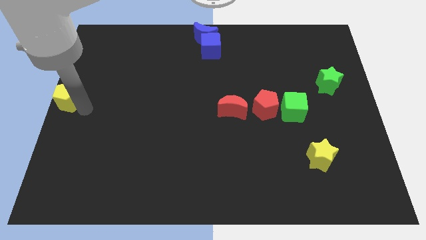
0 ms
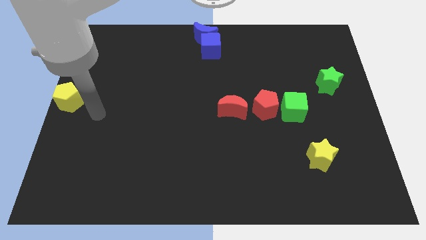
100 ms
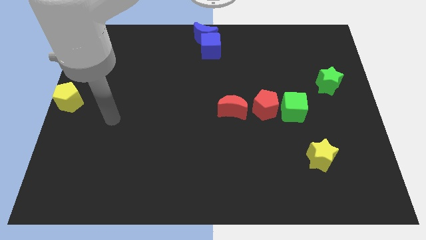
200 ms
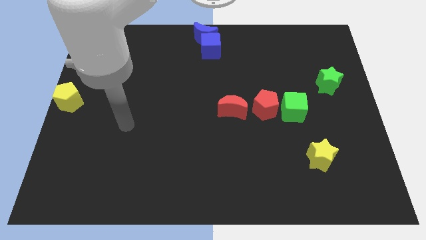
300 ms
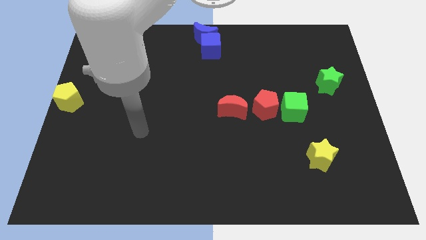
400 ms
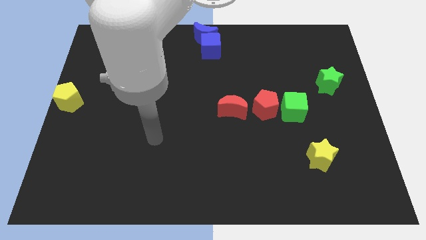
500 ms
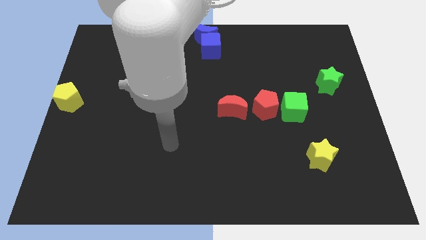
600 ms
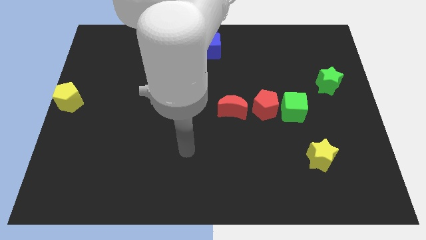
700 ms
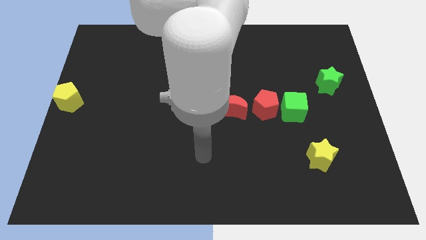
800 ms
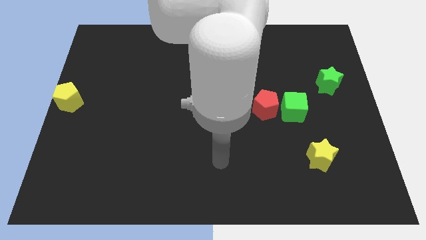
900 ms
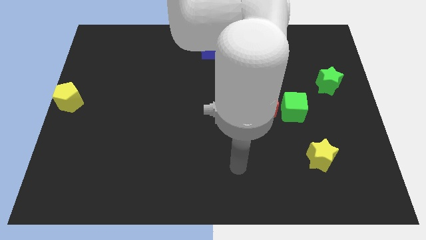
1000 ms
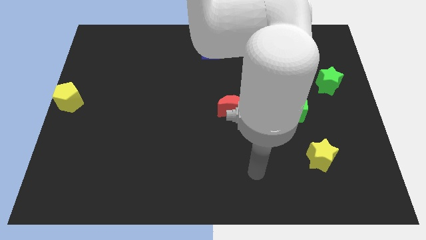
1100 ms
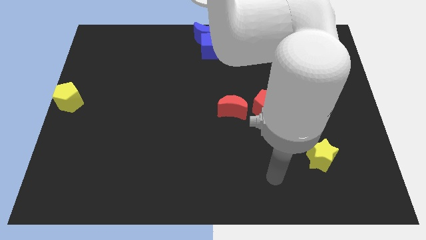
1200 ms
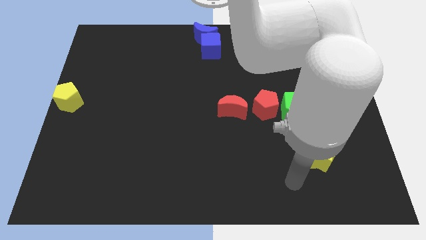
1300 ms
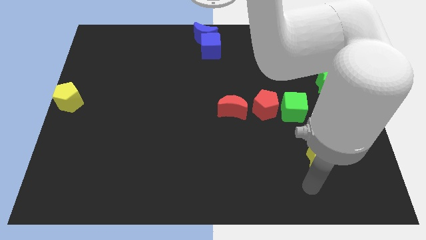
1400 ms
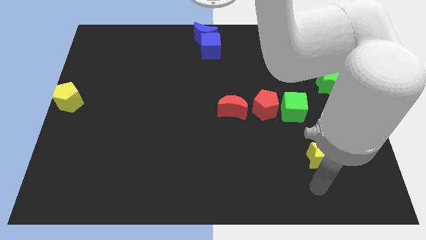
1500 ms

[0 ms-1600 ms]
place your arm below the yellow star

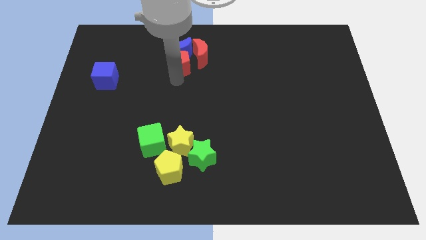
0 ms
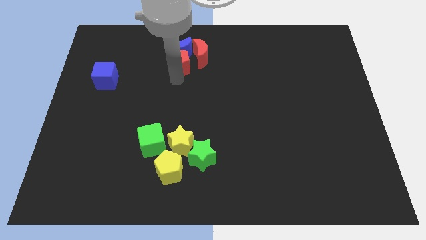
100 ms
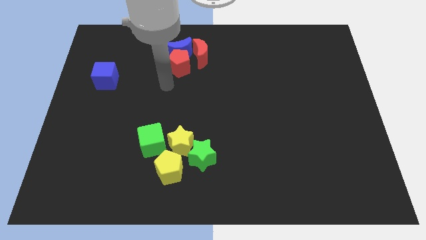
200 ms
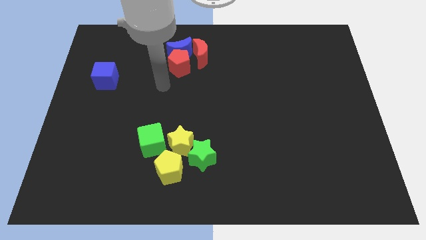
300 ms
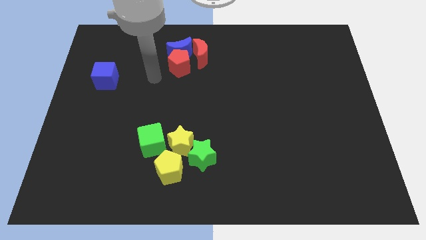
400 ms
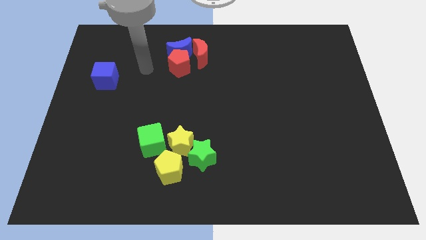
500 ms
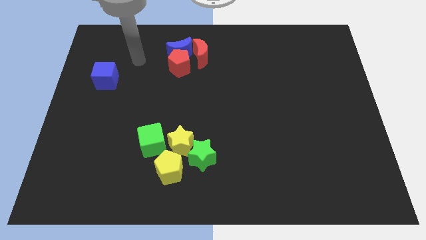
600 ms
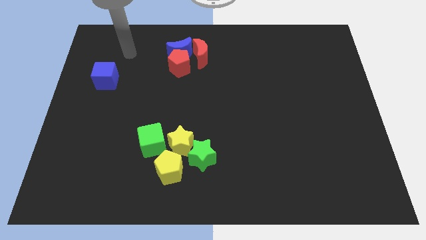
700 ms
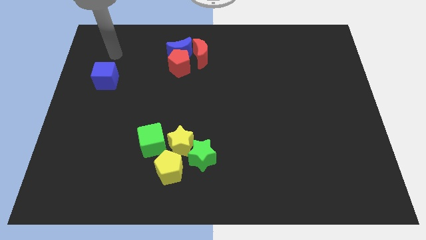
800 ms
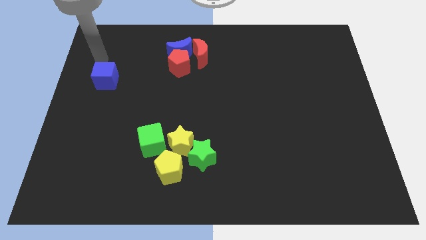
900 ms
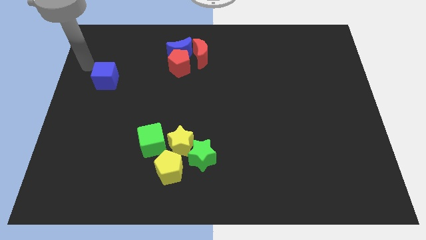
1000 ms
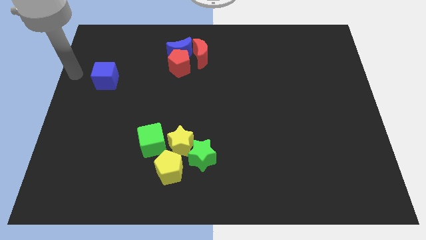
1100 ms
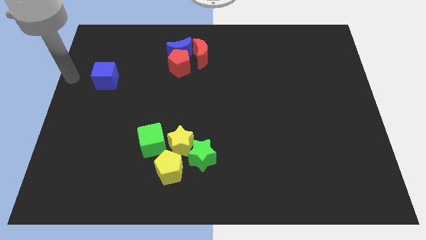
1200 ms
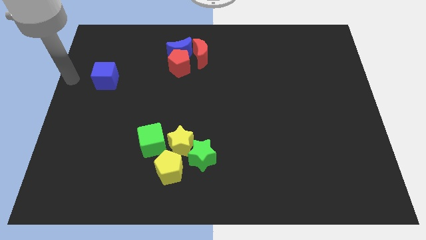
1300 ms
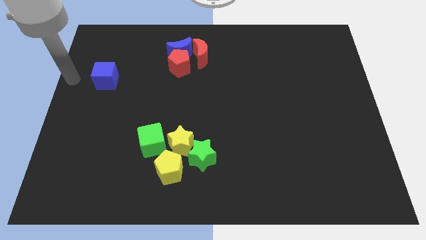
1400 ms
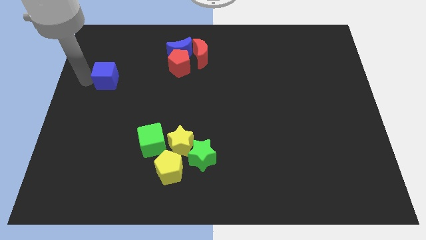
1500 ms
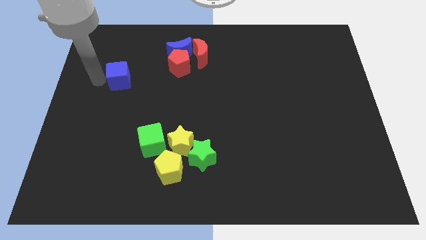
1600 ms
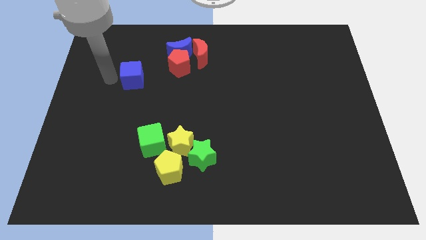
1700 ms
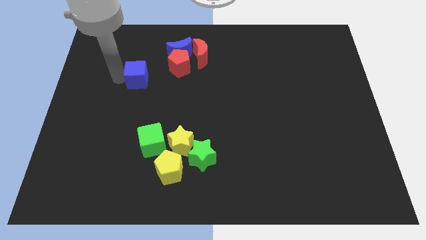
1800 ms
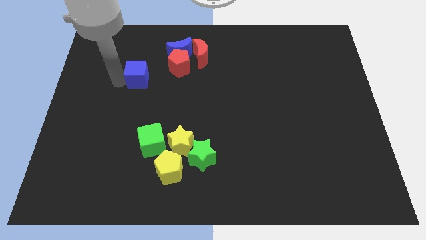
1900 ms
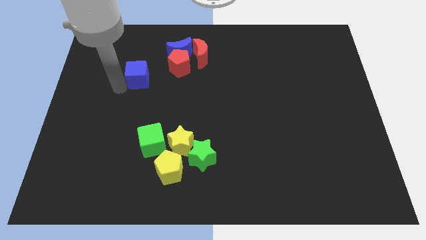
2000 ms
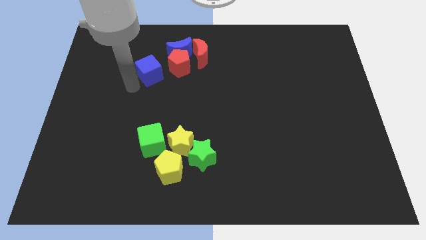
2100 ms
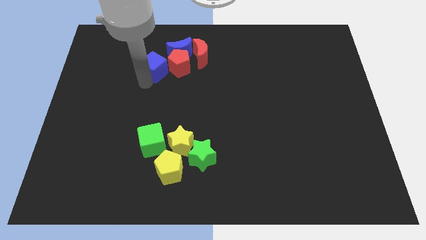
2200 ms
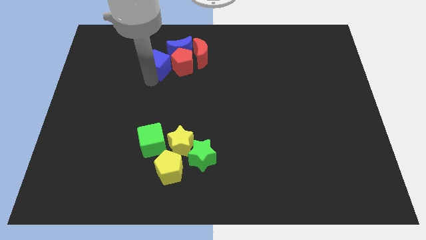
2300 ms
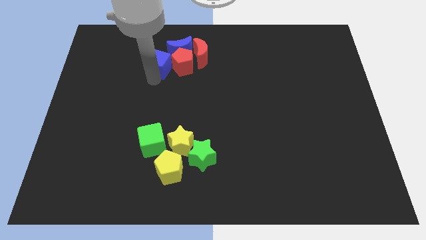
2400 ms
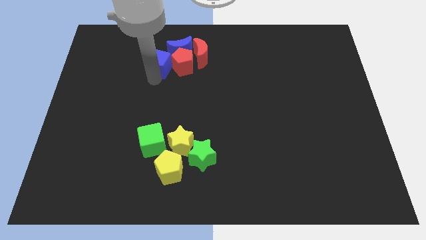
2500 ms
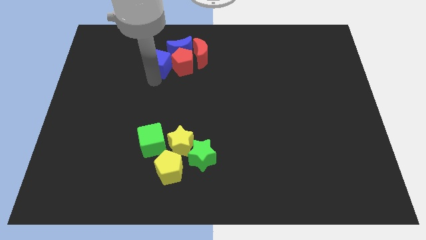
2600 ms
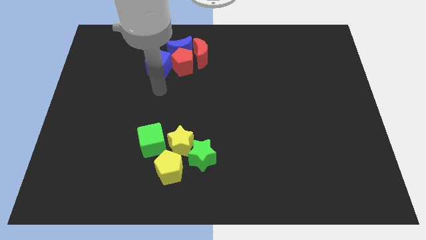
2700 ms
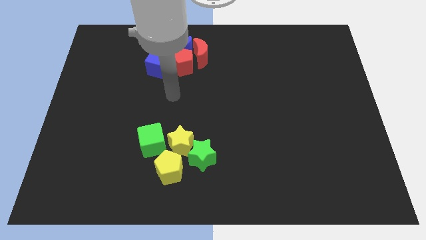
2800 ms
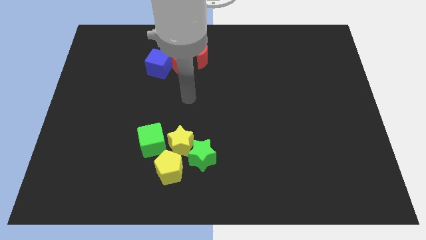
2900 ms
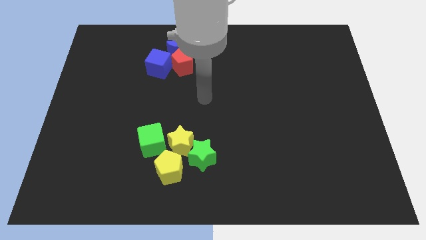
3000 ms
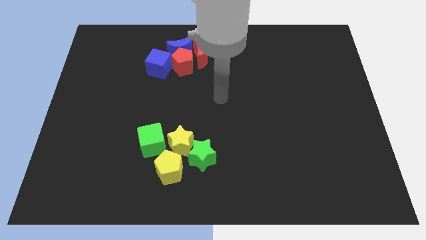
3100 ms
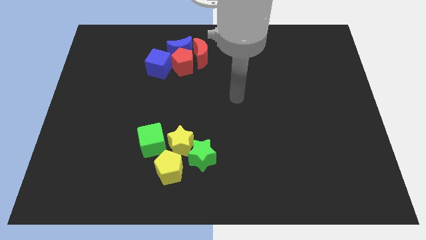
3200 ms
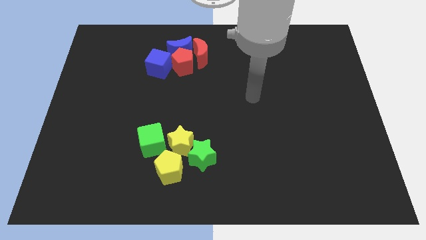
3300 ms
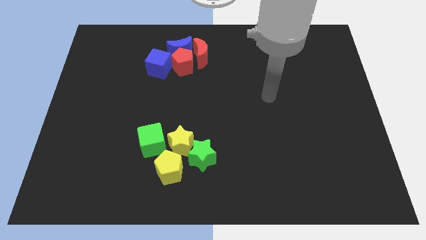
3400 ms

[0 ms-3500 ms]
push the blue cube into the red pentagon

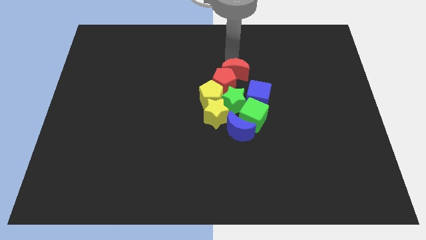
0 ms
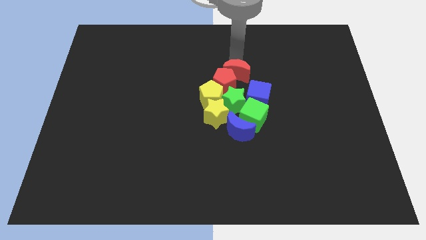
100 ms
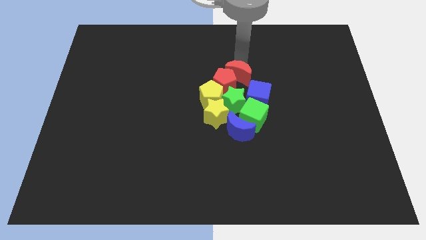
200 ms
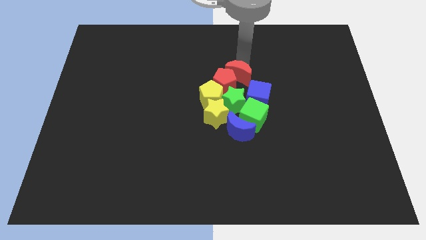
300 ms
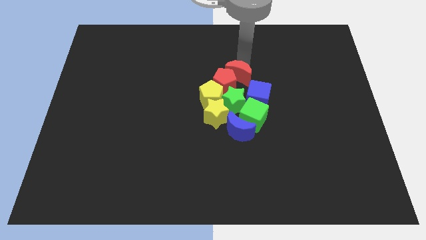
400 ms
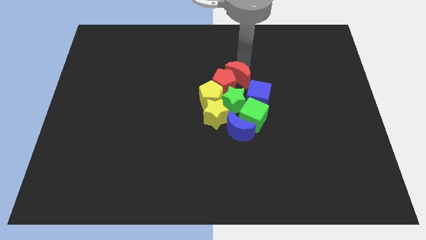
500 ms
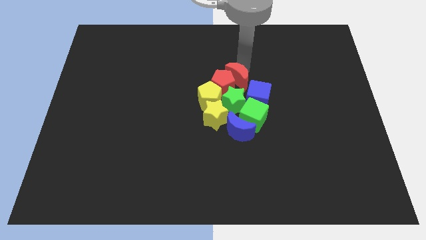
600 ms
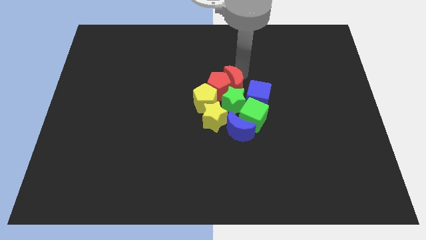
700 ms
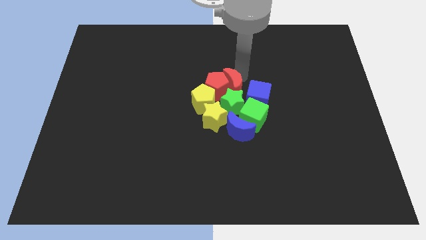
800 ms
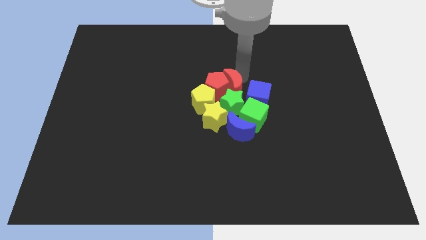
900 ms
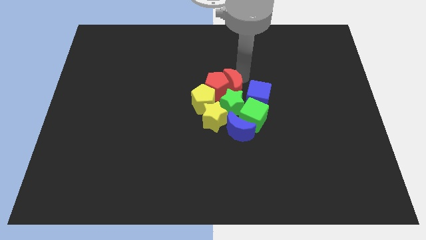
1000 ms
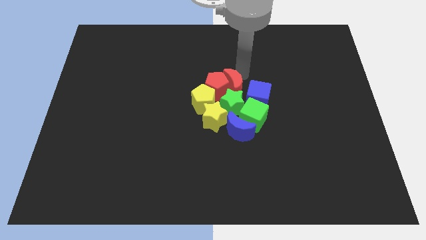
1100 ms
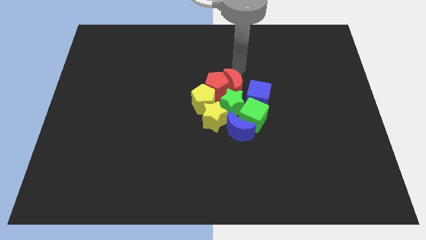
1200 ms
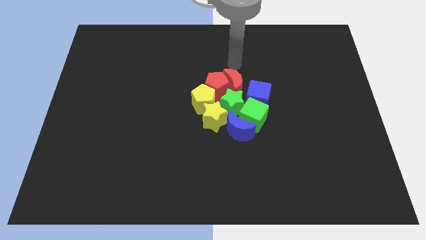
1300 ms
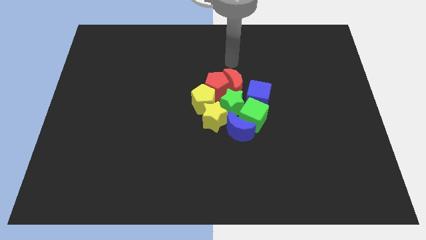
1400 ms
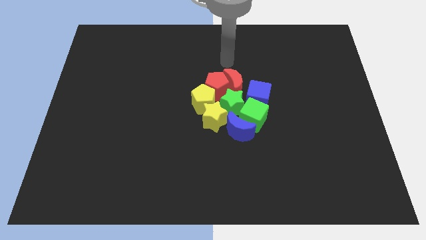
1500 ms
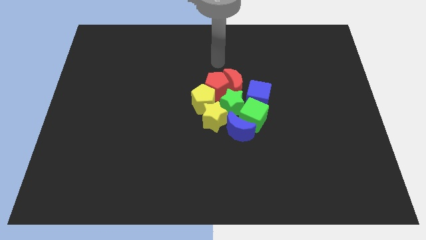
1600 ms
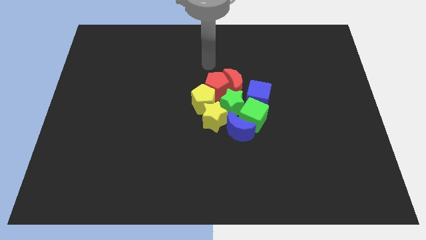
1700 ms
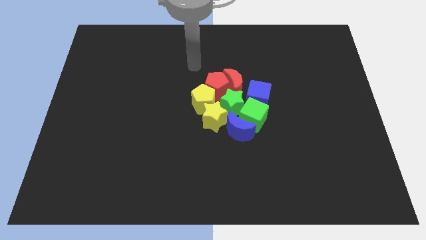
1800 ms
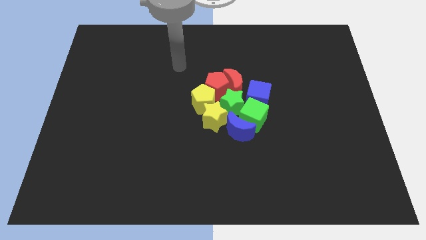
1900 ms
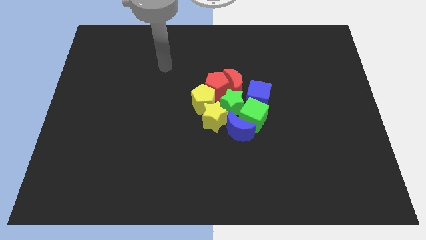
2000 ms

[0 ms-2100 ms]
push the red moon into the group of blocks

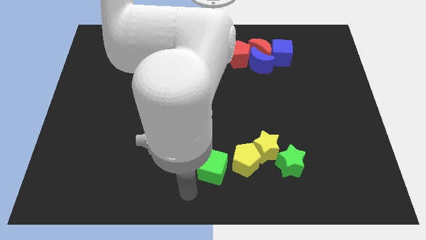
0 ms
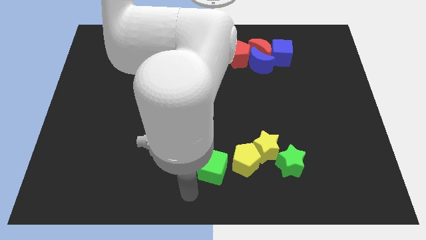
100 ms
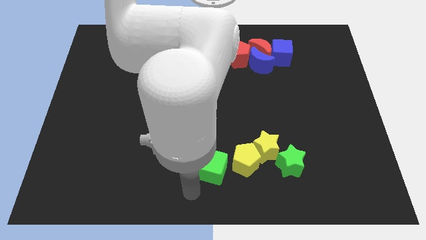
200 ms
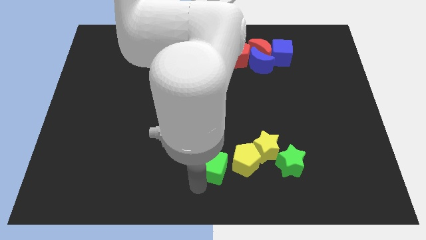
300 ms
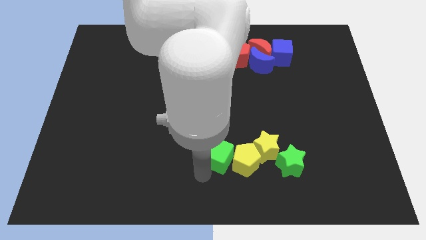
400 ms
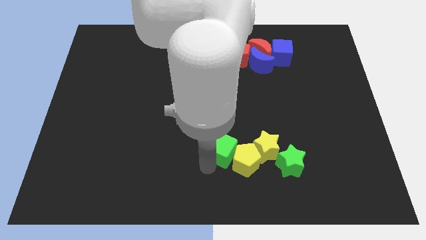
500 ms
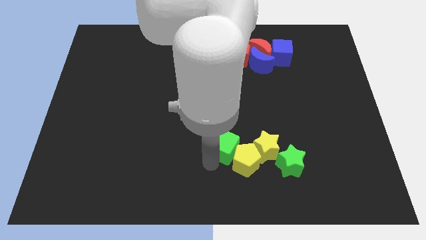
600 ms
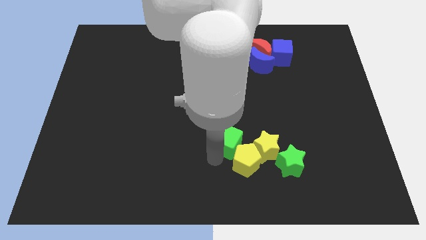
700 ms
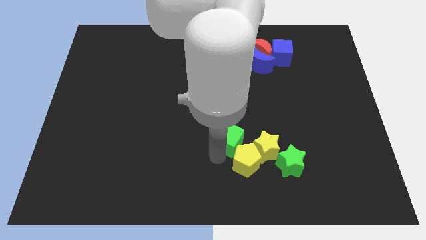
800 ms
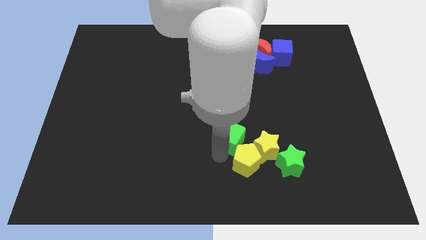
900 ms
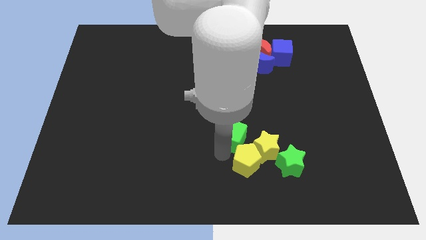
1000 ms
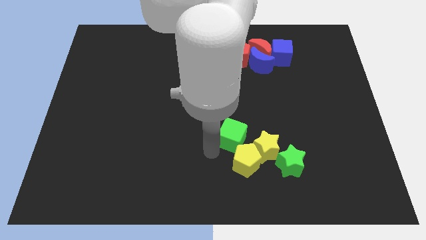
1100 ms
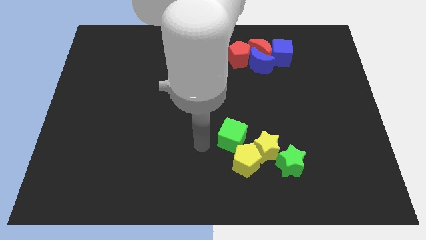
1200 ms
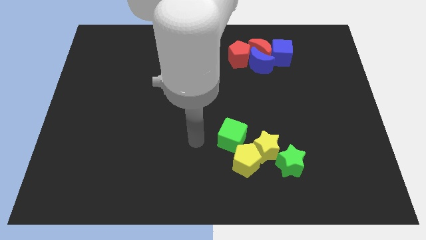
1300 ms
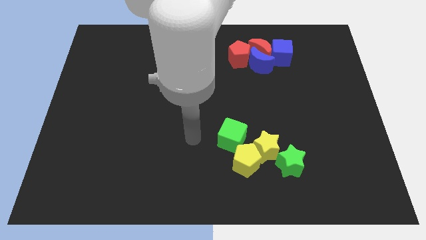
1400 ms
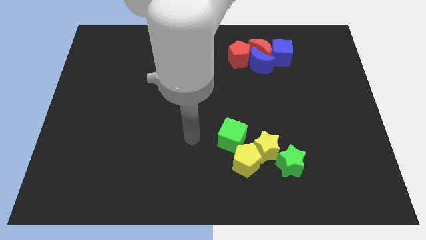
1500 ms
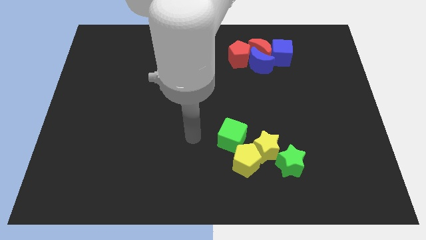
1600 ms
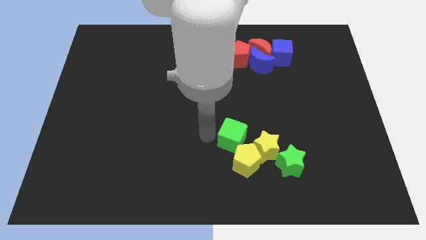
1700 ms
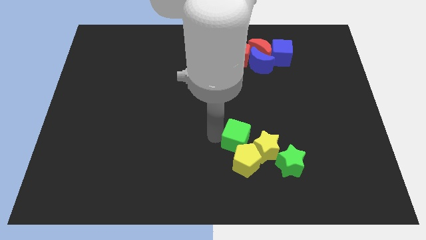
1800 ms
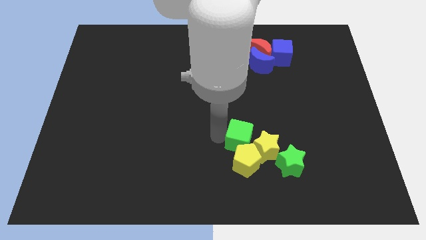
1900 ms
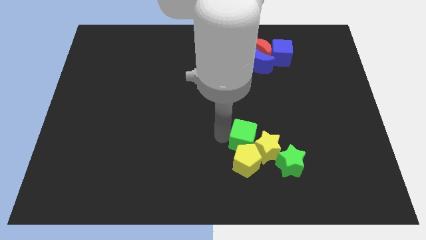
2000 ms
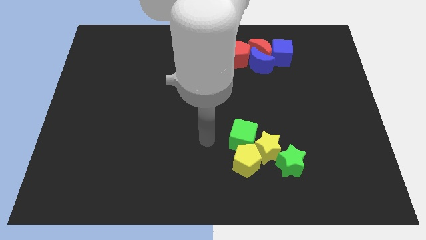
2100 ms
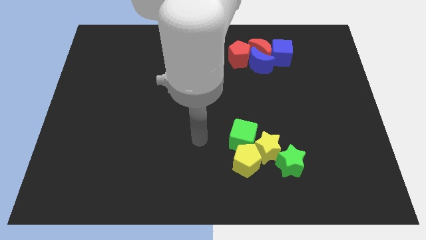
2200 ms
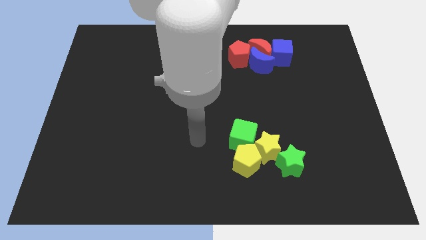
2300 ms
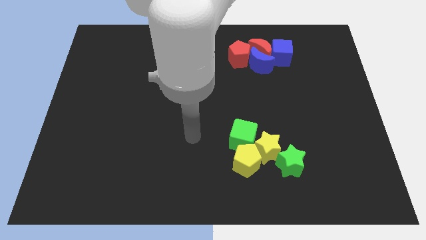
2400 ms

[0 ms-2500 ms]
move the green cube upto the yellow star and yellow pentagon
